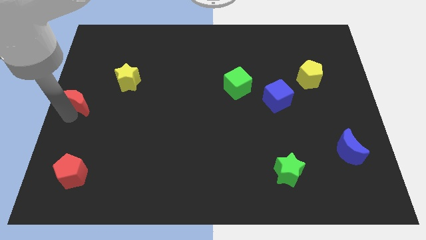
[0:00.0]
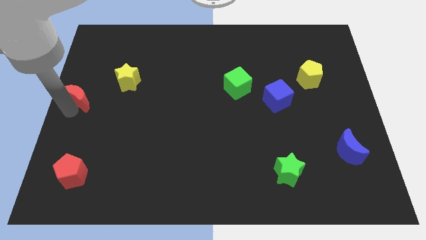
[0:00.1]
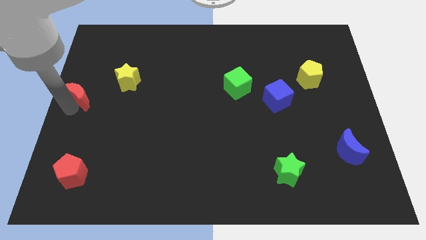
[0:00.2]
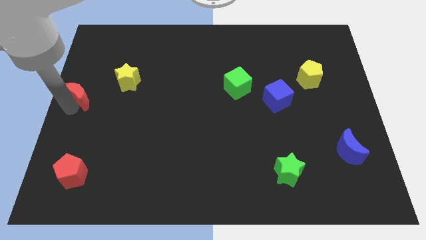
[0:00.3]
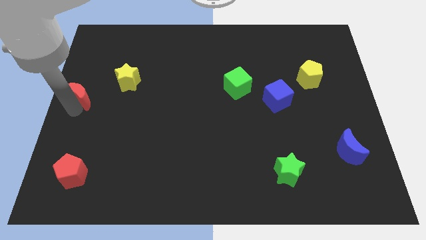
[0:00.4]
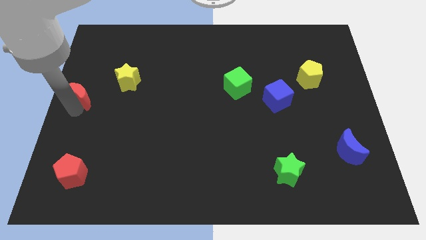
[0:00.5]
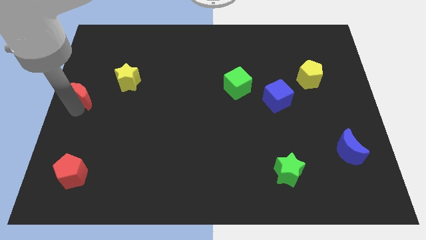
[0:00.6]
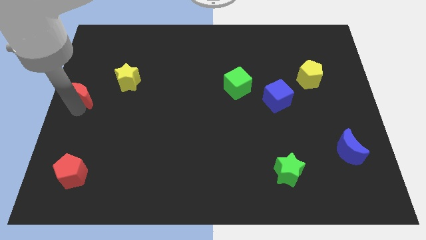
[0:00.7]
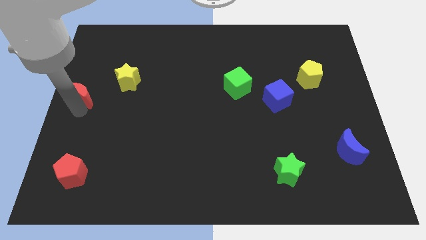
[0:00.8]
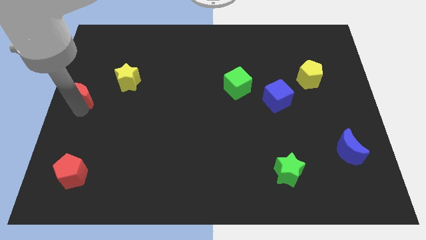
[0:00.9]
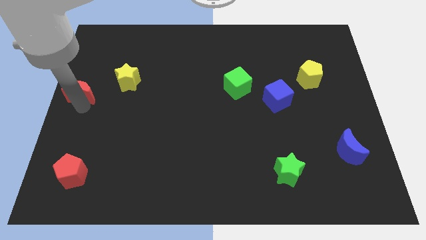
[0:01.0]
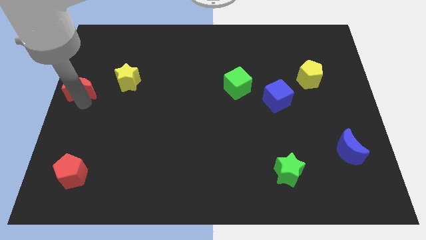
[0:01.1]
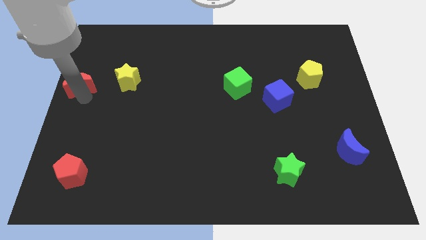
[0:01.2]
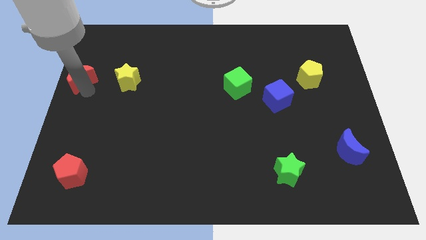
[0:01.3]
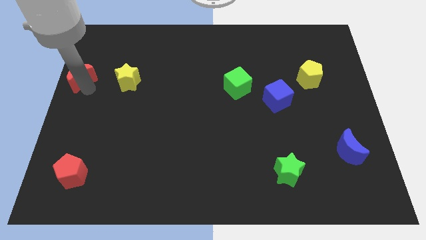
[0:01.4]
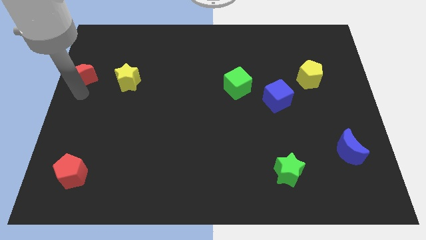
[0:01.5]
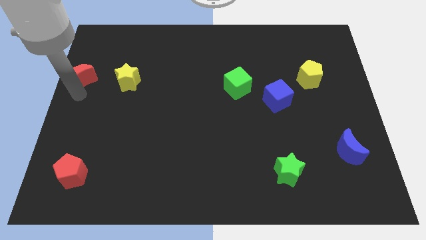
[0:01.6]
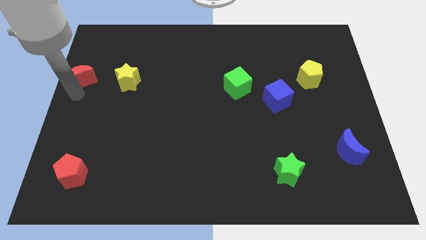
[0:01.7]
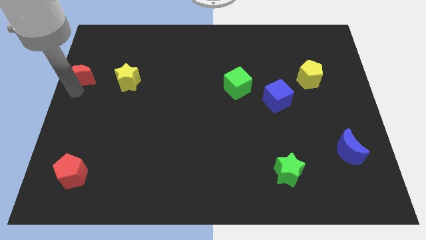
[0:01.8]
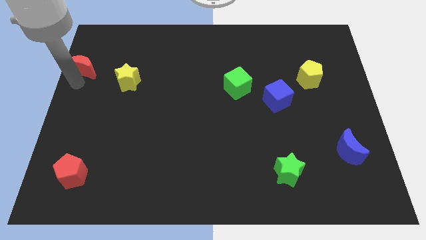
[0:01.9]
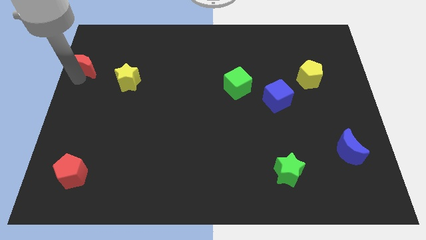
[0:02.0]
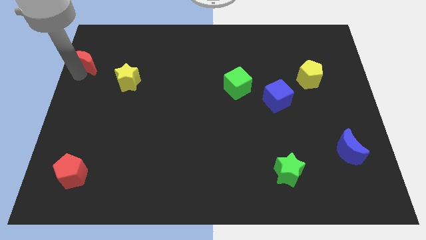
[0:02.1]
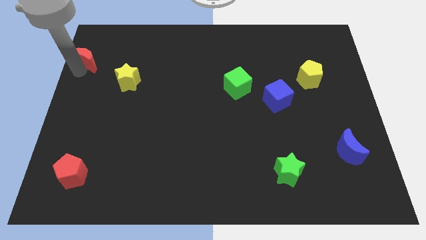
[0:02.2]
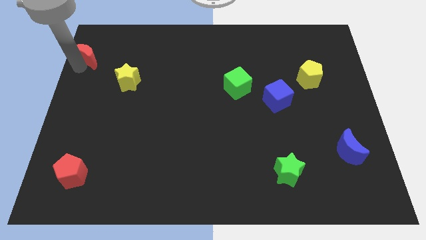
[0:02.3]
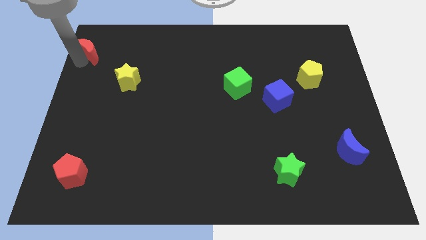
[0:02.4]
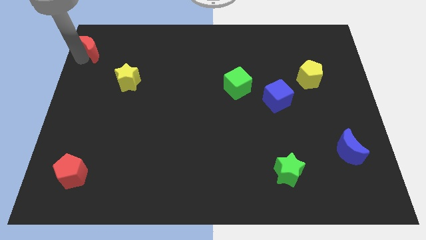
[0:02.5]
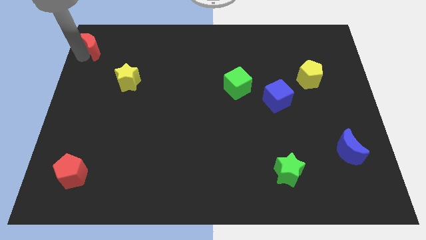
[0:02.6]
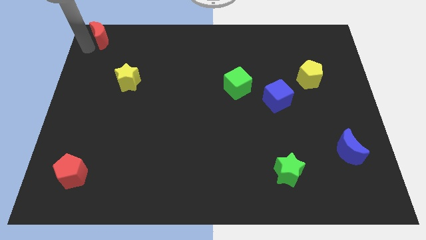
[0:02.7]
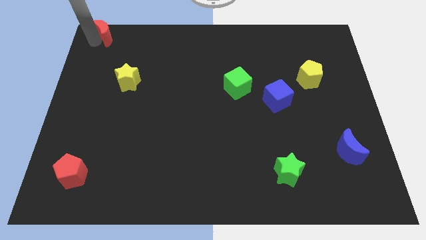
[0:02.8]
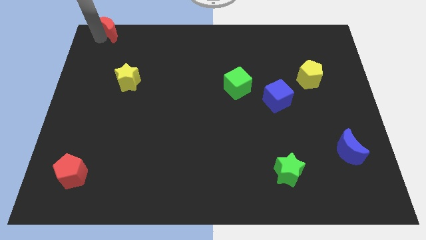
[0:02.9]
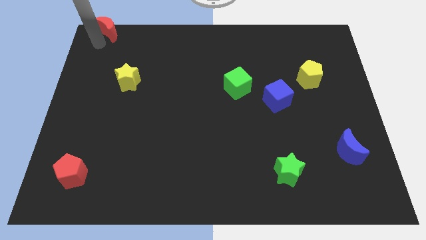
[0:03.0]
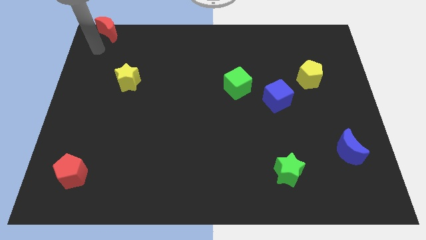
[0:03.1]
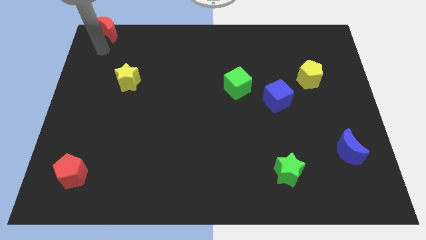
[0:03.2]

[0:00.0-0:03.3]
slide the red moon towards the top left corner of the board

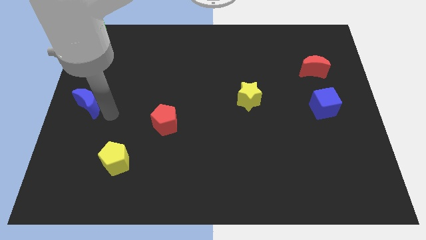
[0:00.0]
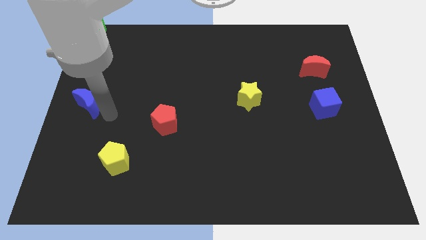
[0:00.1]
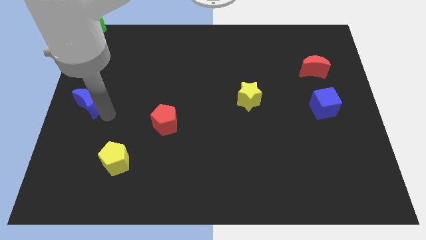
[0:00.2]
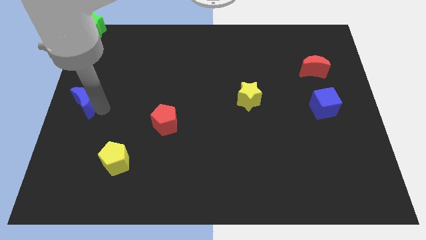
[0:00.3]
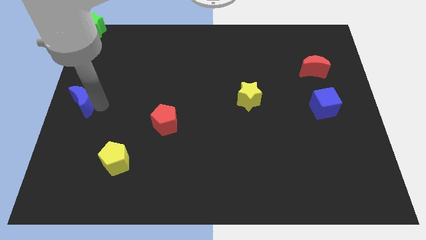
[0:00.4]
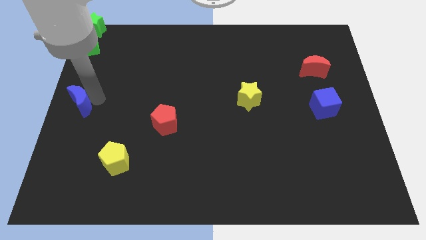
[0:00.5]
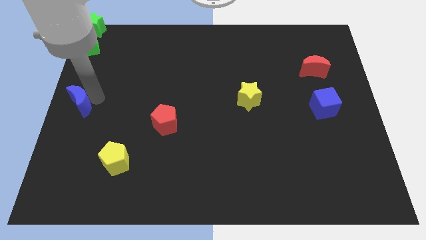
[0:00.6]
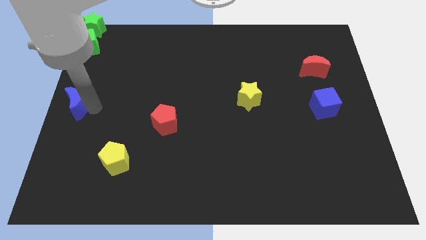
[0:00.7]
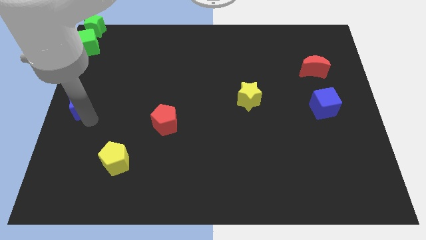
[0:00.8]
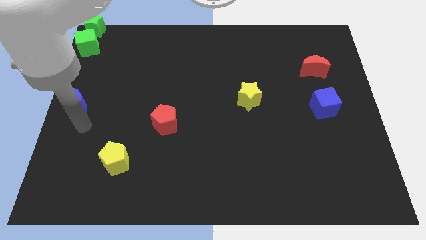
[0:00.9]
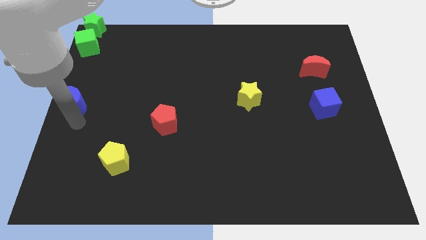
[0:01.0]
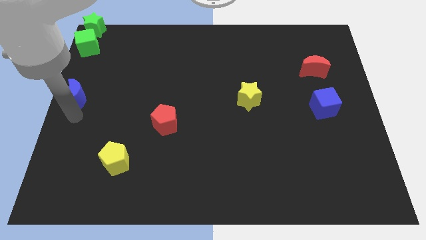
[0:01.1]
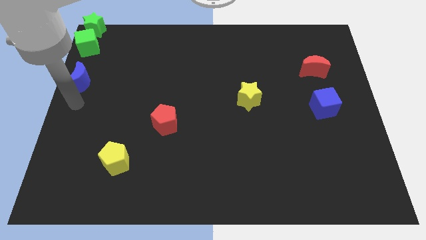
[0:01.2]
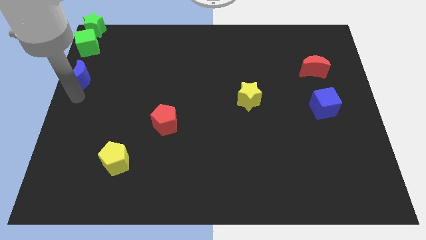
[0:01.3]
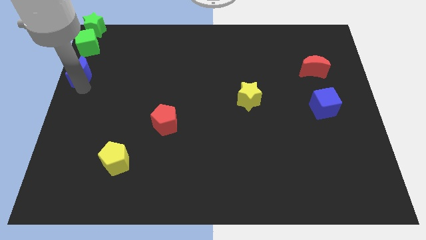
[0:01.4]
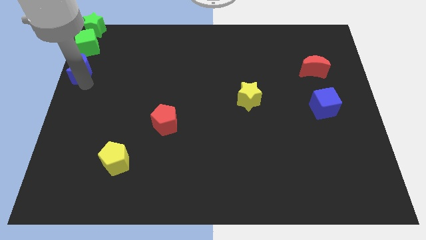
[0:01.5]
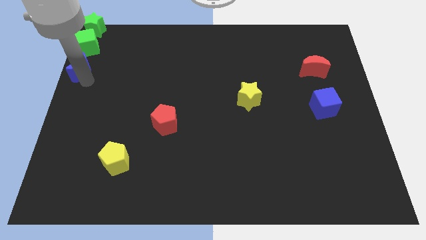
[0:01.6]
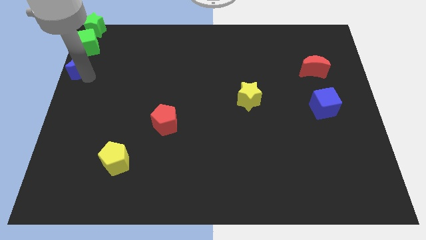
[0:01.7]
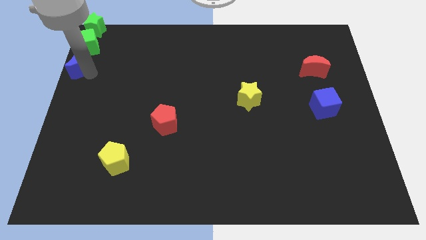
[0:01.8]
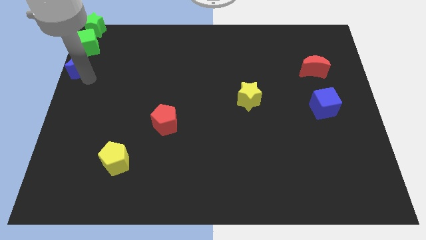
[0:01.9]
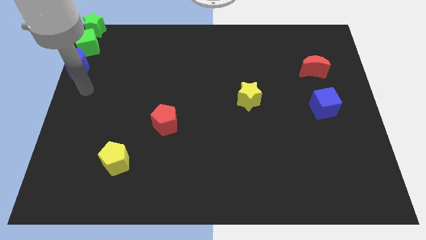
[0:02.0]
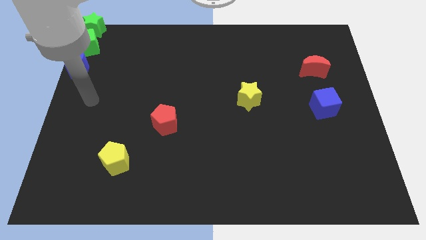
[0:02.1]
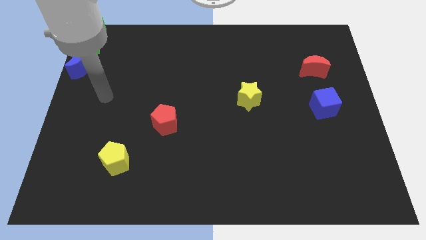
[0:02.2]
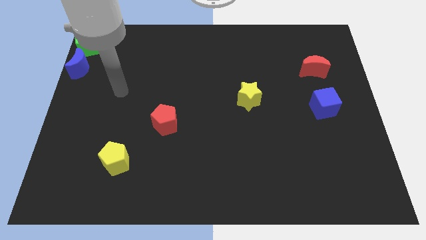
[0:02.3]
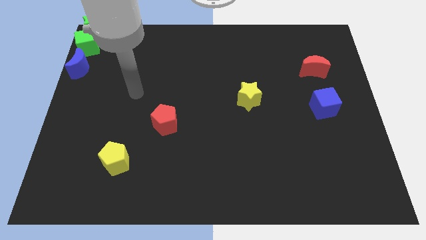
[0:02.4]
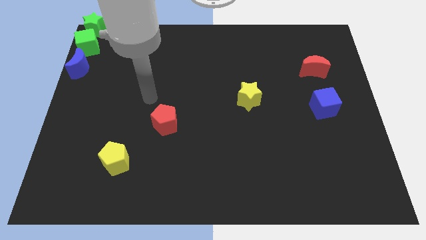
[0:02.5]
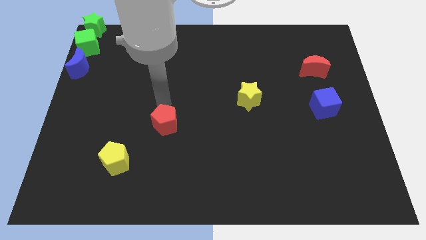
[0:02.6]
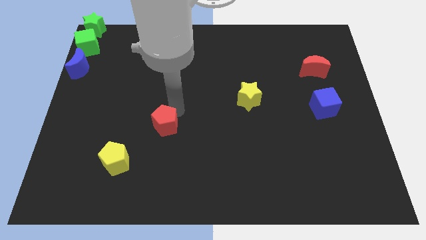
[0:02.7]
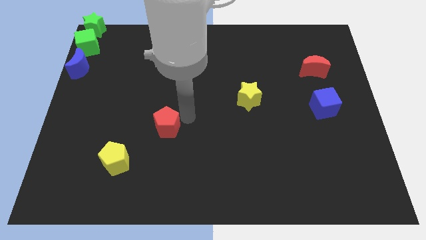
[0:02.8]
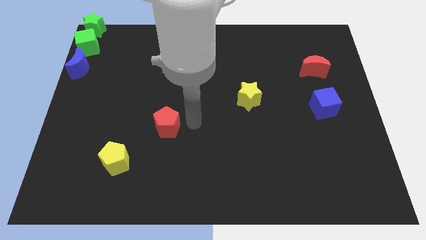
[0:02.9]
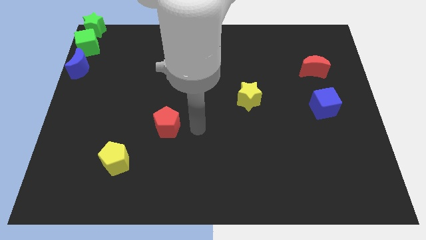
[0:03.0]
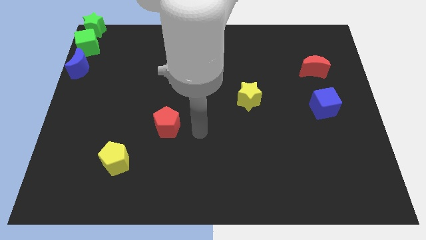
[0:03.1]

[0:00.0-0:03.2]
slightly touch right to the red pentagon

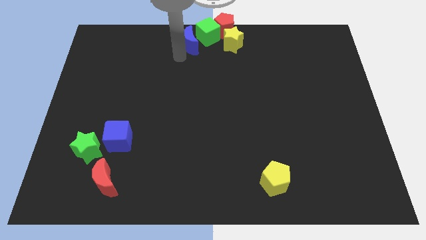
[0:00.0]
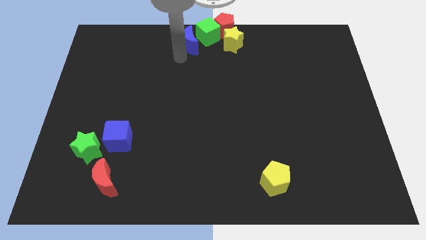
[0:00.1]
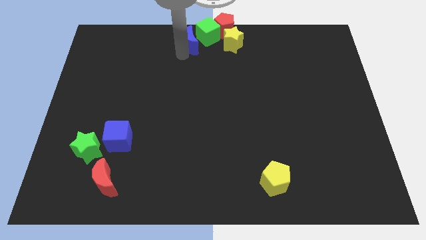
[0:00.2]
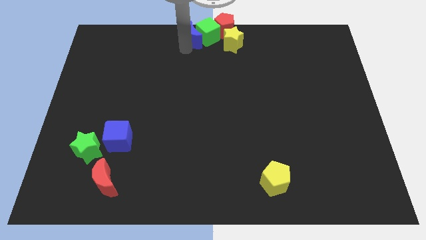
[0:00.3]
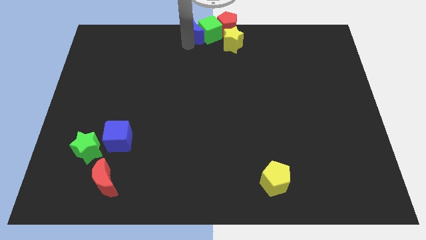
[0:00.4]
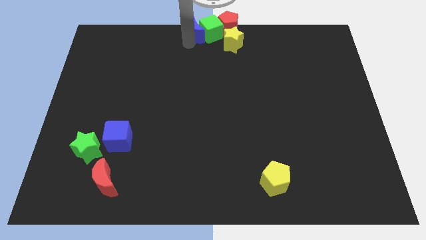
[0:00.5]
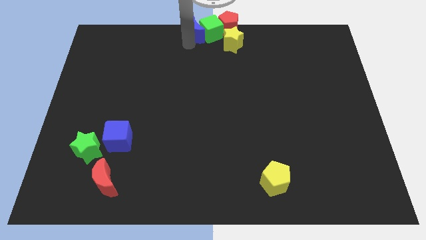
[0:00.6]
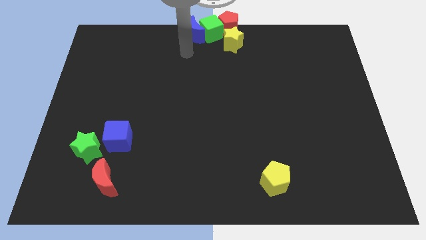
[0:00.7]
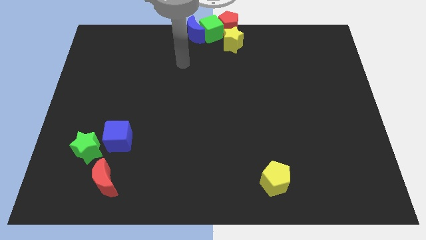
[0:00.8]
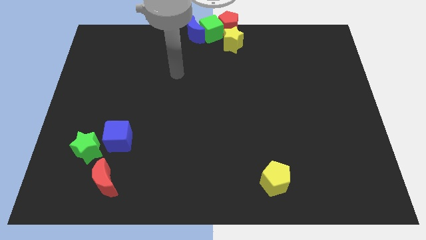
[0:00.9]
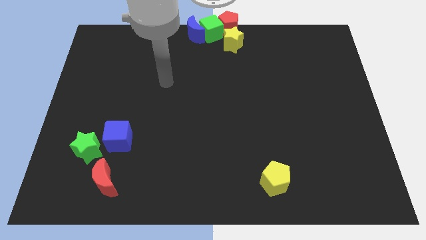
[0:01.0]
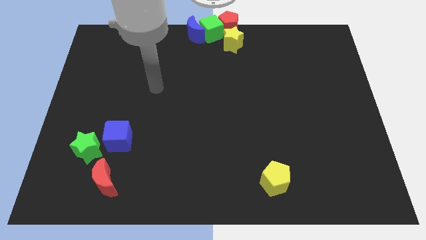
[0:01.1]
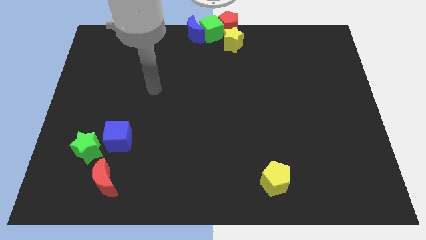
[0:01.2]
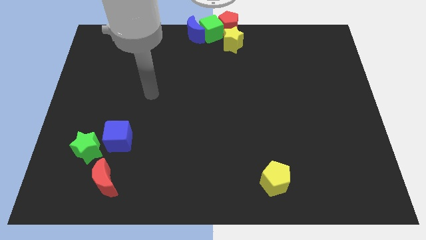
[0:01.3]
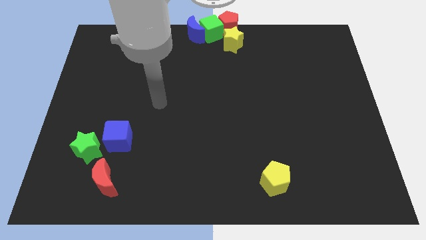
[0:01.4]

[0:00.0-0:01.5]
push the blue moon into the green cube

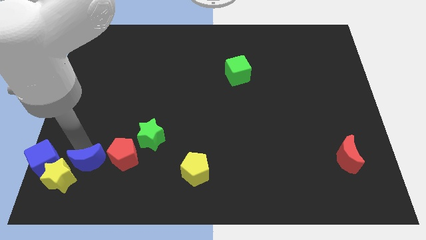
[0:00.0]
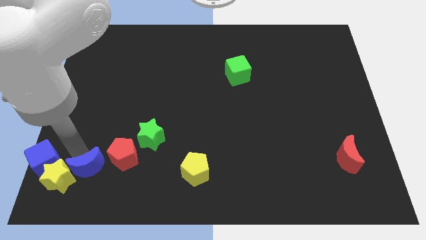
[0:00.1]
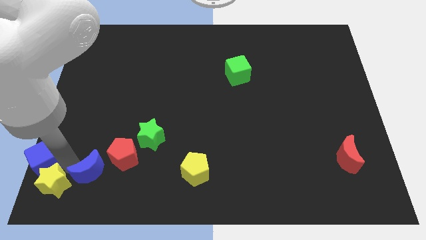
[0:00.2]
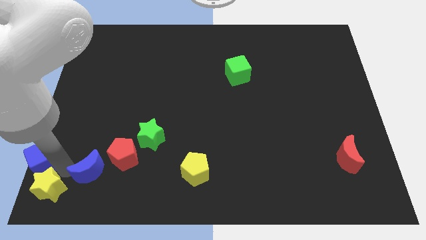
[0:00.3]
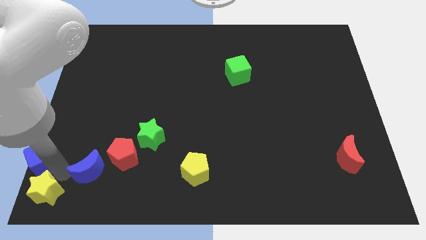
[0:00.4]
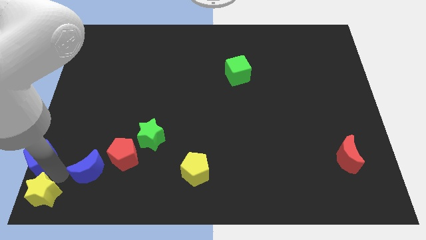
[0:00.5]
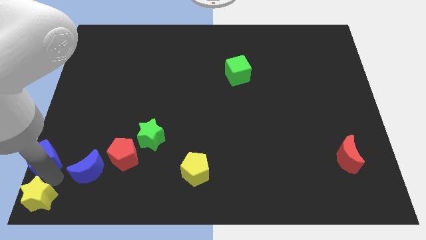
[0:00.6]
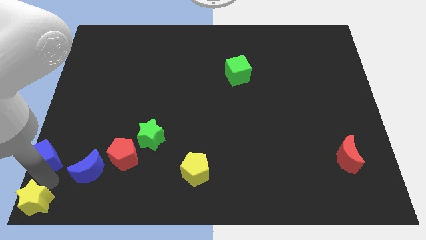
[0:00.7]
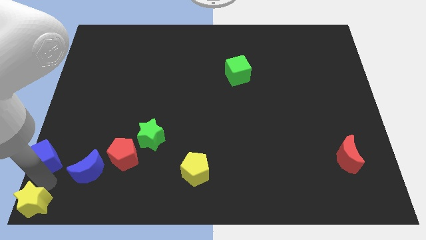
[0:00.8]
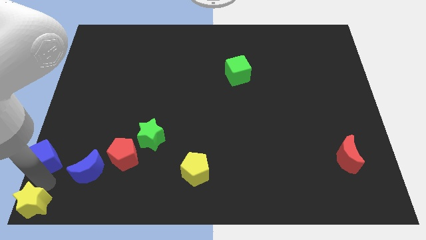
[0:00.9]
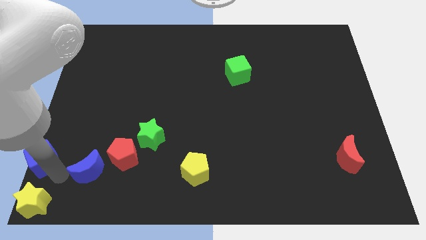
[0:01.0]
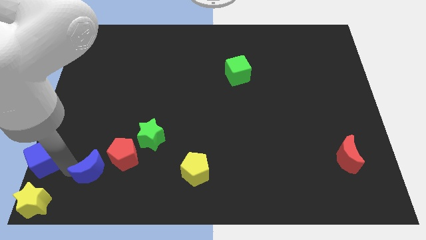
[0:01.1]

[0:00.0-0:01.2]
move the yellow star to the bottom left corner
